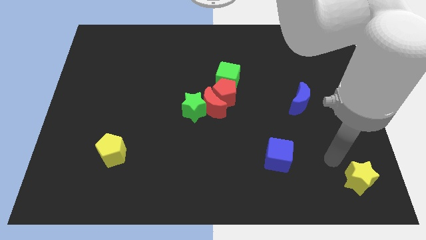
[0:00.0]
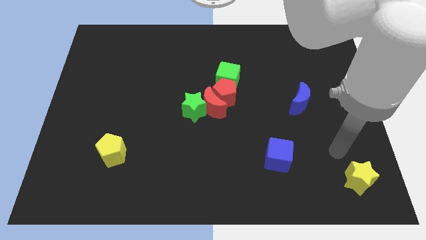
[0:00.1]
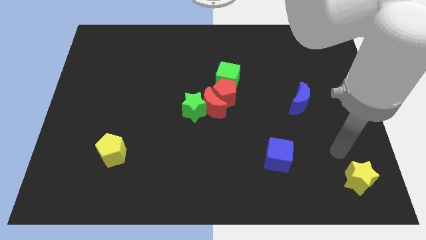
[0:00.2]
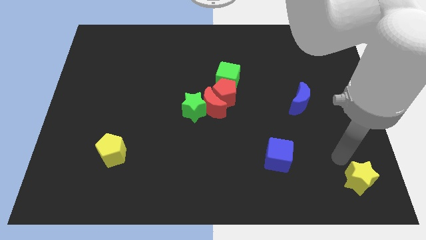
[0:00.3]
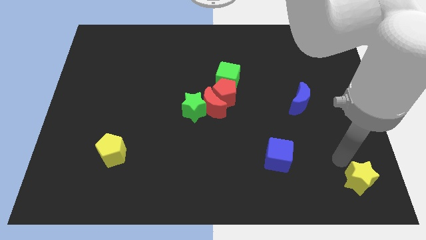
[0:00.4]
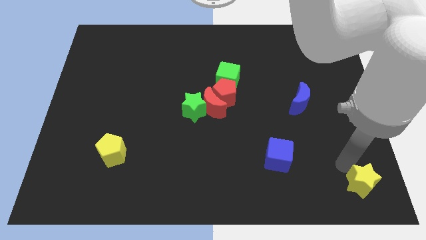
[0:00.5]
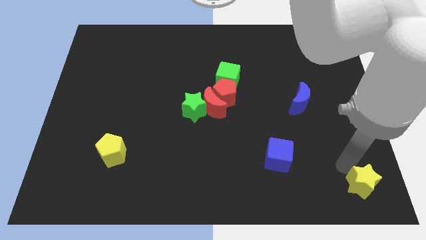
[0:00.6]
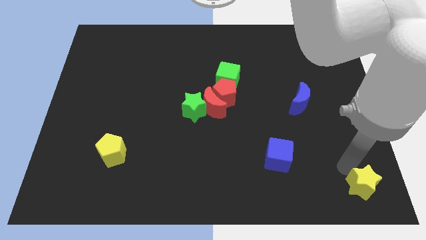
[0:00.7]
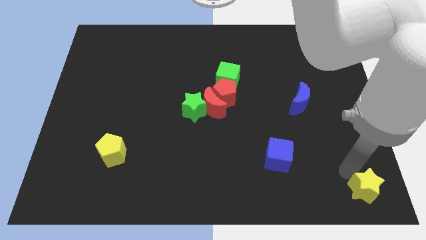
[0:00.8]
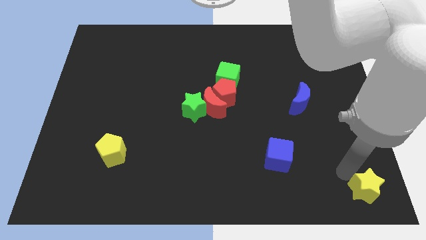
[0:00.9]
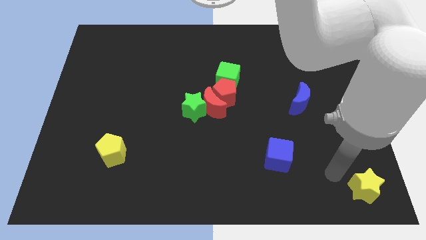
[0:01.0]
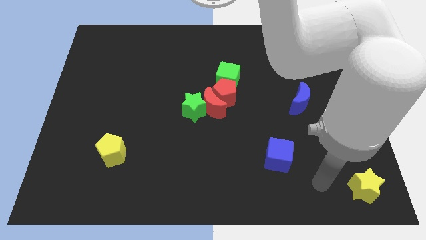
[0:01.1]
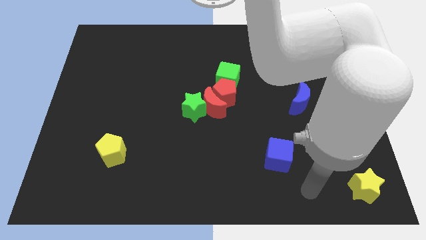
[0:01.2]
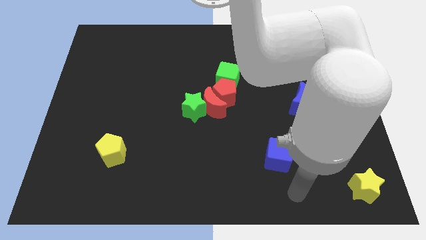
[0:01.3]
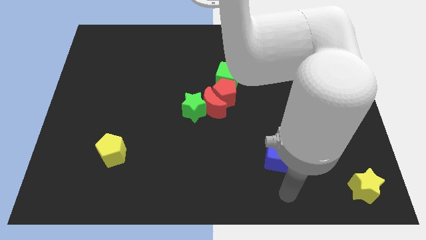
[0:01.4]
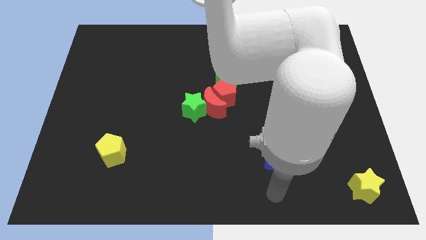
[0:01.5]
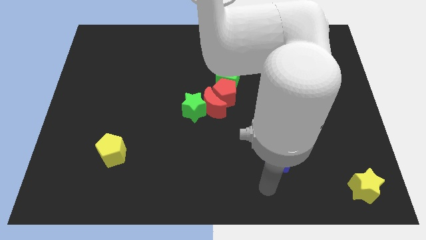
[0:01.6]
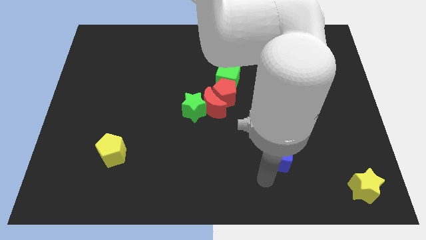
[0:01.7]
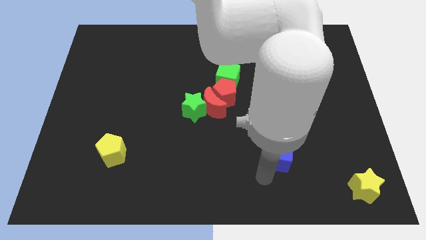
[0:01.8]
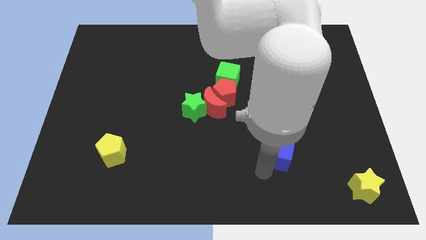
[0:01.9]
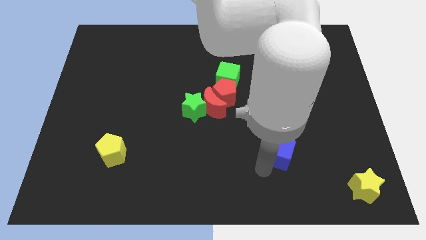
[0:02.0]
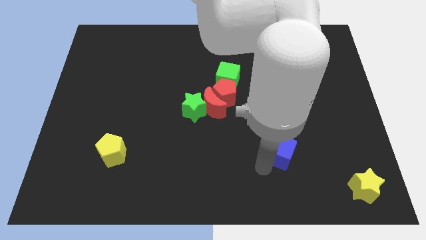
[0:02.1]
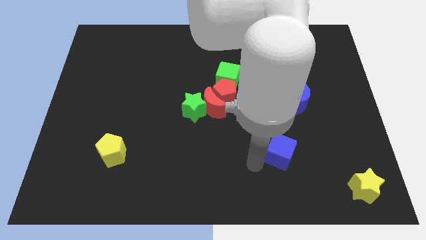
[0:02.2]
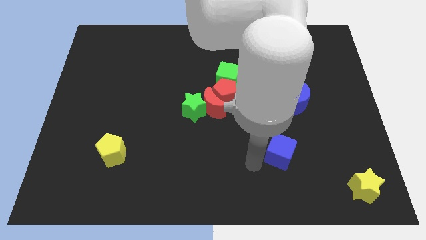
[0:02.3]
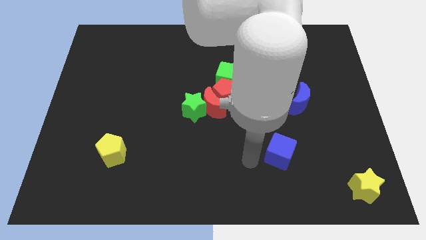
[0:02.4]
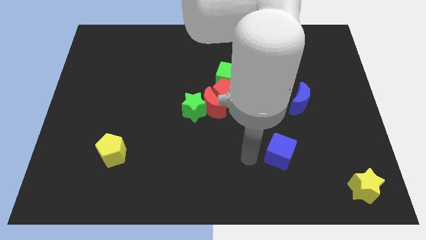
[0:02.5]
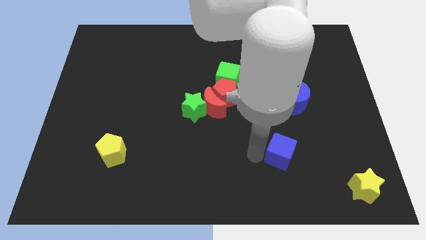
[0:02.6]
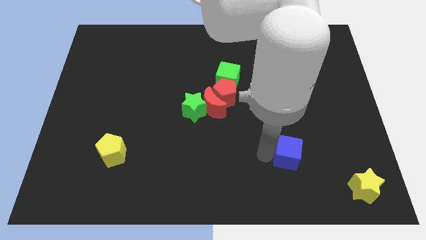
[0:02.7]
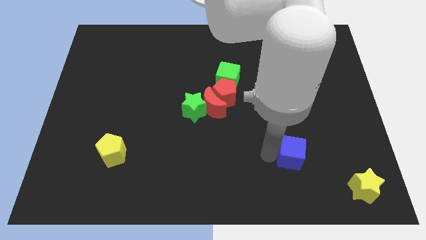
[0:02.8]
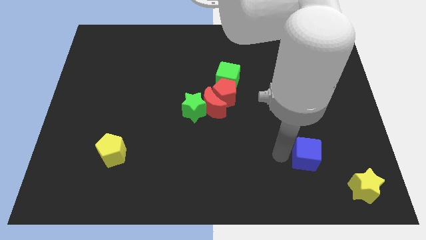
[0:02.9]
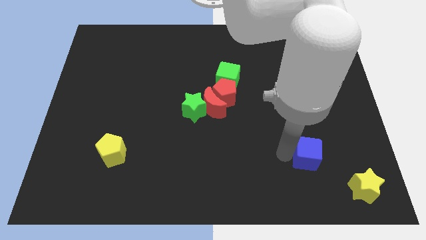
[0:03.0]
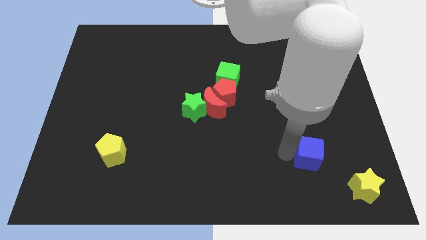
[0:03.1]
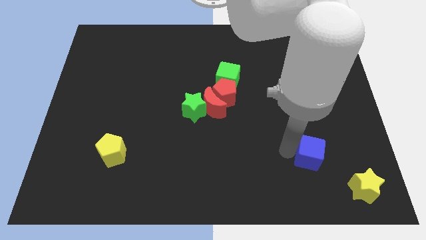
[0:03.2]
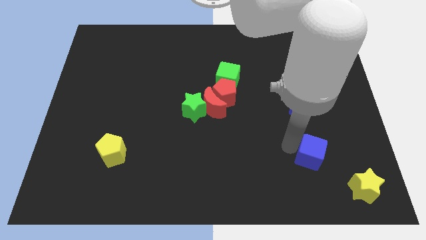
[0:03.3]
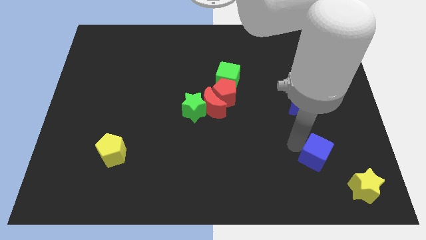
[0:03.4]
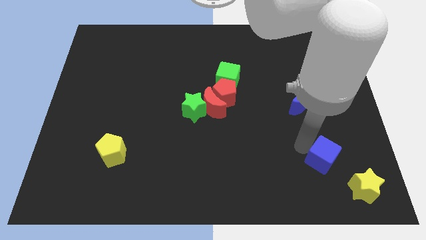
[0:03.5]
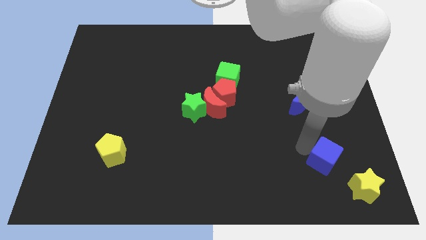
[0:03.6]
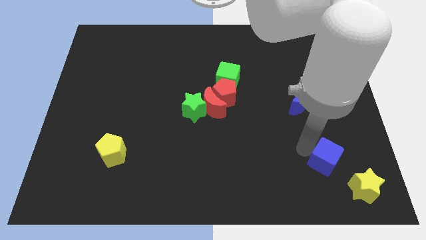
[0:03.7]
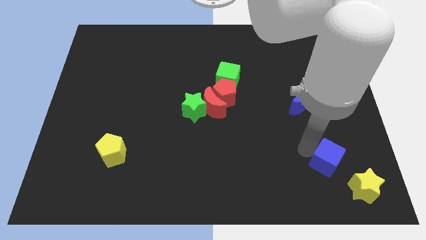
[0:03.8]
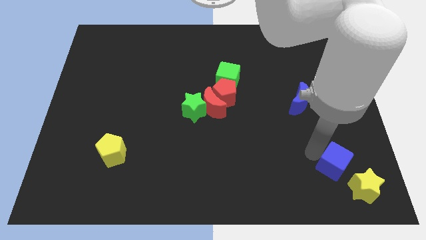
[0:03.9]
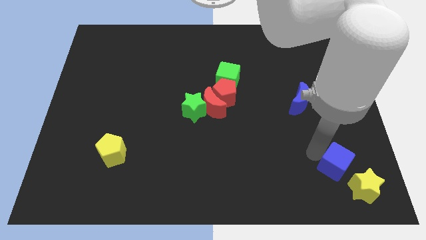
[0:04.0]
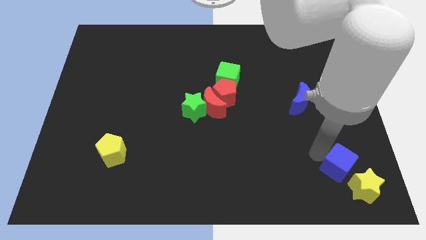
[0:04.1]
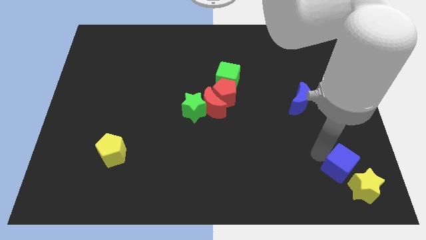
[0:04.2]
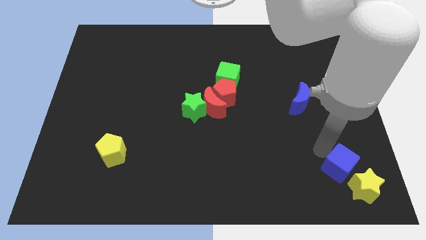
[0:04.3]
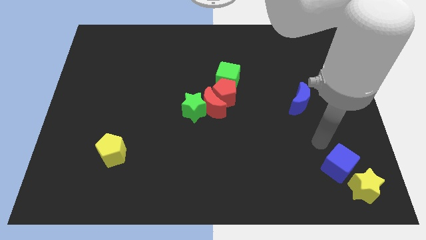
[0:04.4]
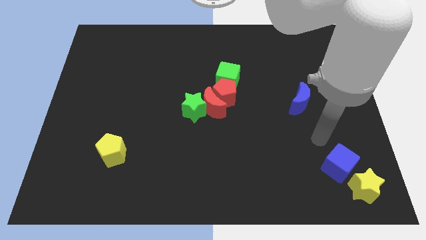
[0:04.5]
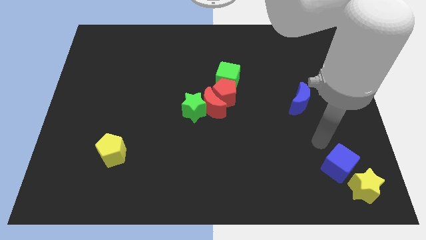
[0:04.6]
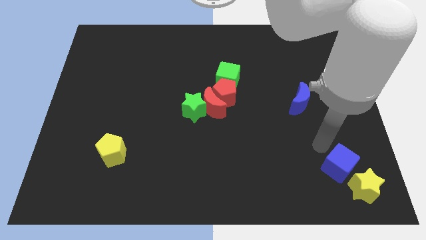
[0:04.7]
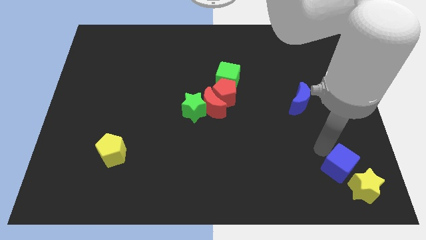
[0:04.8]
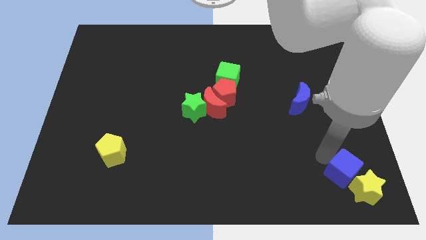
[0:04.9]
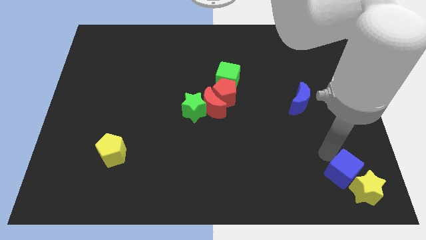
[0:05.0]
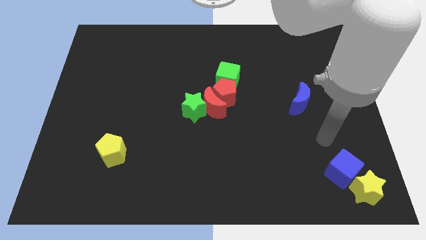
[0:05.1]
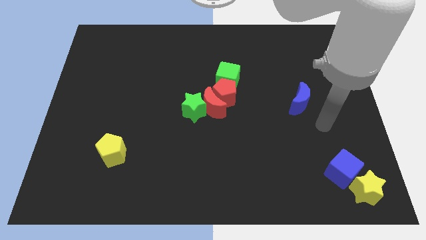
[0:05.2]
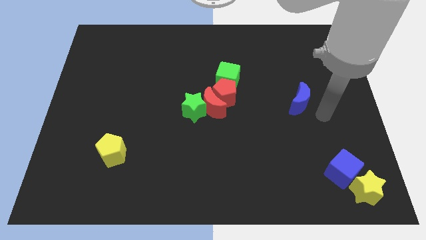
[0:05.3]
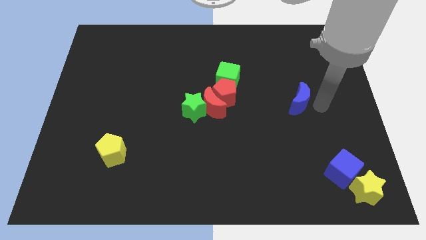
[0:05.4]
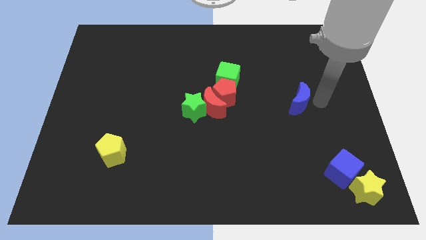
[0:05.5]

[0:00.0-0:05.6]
push the blue cube into the yellow star

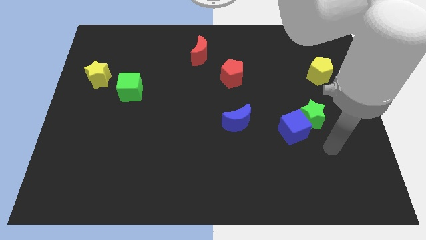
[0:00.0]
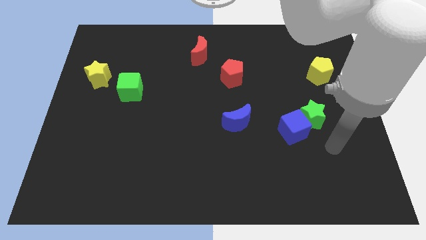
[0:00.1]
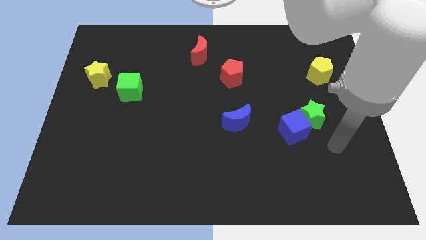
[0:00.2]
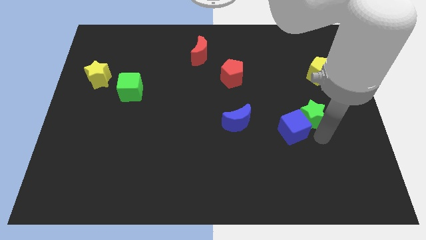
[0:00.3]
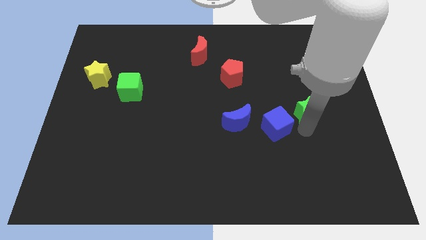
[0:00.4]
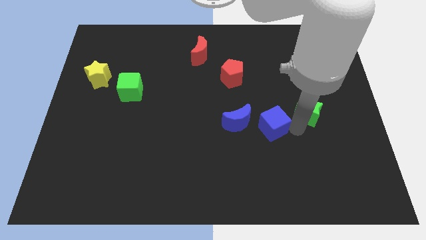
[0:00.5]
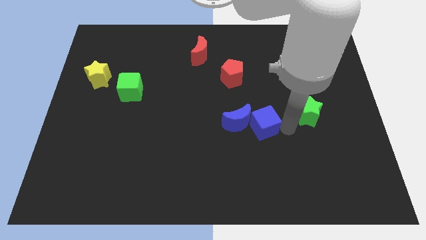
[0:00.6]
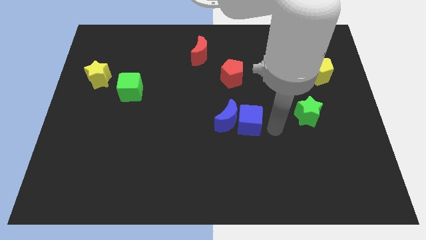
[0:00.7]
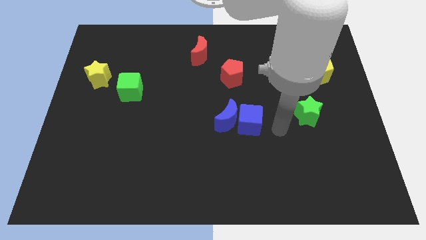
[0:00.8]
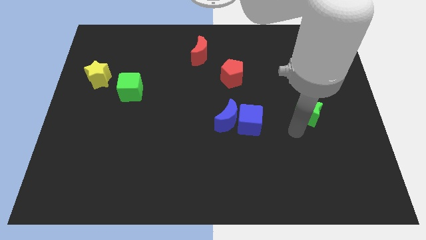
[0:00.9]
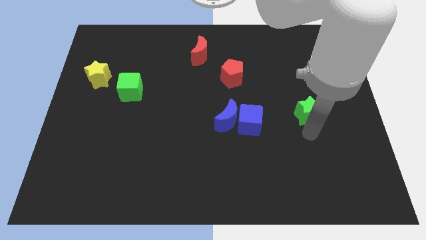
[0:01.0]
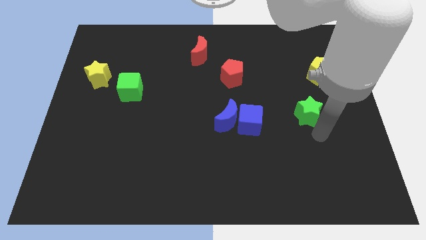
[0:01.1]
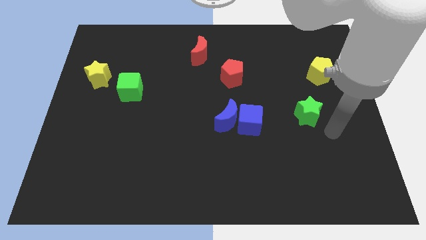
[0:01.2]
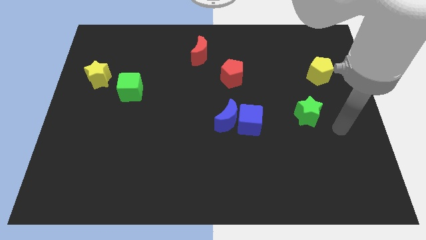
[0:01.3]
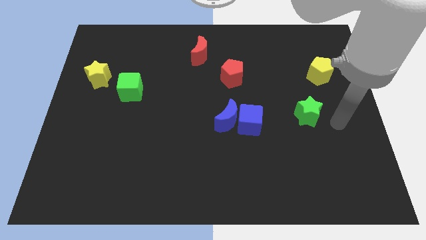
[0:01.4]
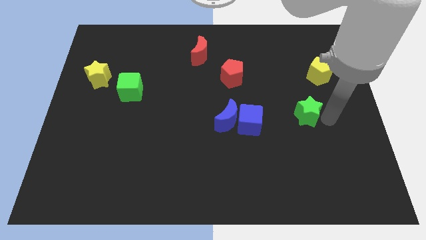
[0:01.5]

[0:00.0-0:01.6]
push the blue cube into the blue crescent

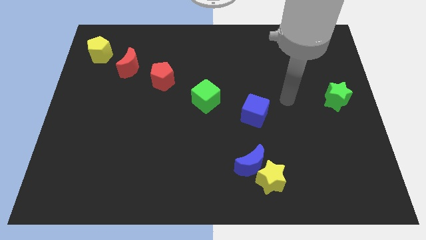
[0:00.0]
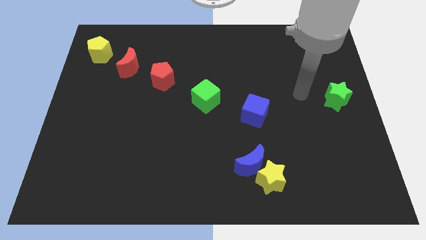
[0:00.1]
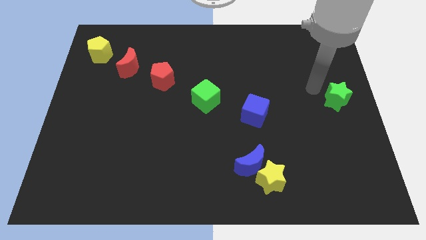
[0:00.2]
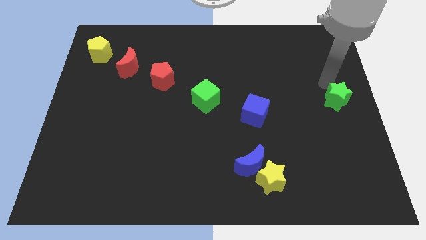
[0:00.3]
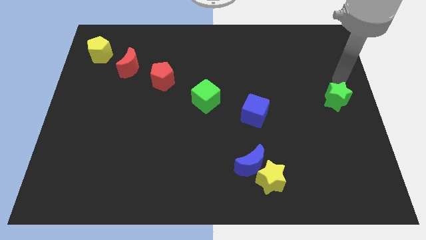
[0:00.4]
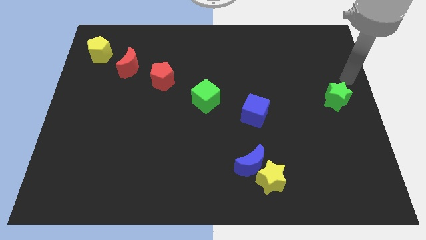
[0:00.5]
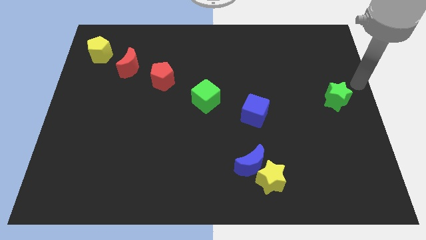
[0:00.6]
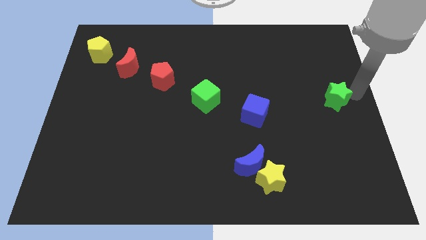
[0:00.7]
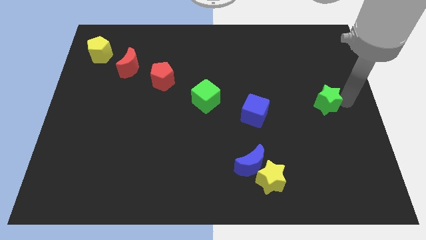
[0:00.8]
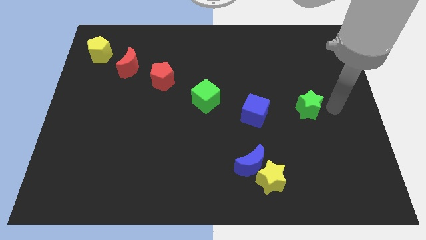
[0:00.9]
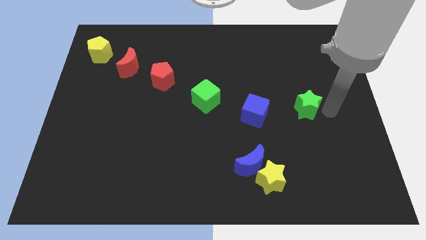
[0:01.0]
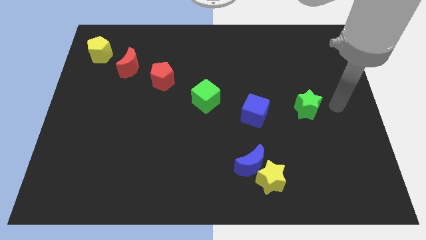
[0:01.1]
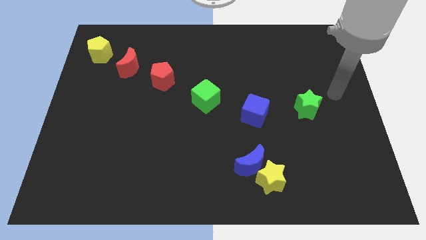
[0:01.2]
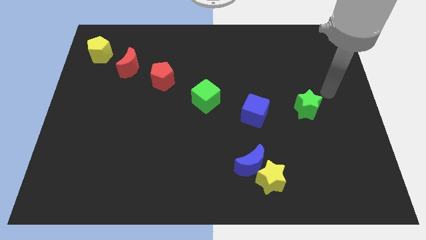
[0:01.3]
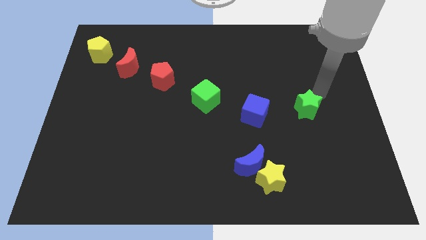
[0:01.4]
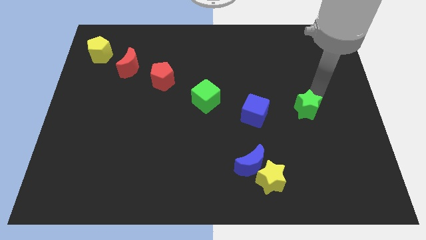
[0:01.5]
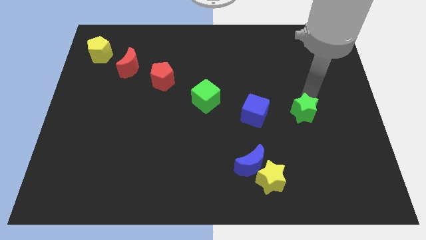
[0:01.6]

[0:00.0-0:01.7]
drag green star near blue cube

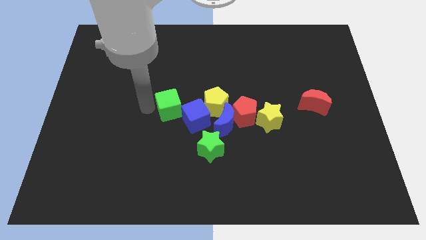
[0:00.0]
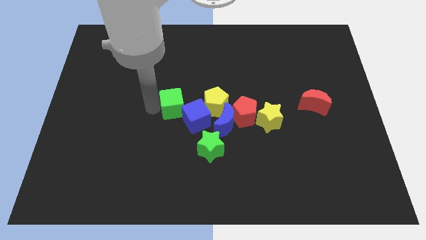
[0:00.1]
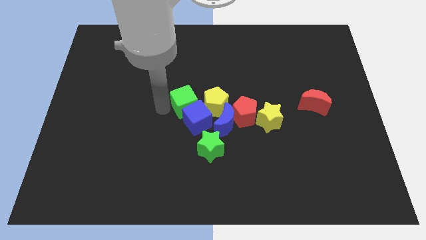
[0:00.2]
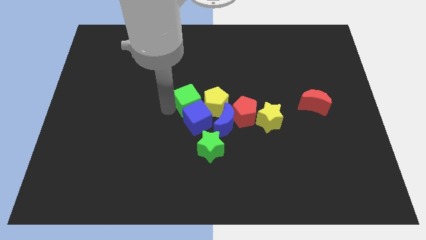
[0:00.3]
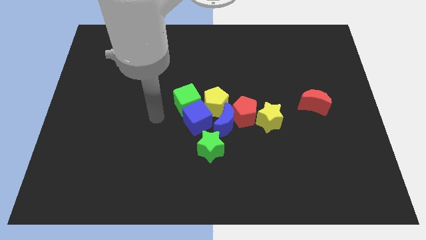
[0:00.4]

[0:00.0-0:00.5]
place the green cube left to the yellow pentagon
